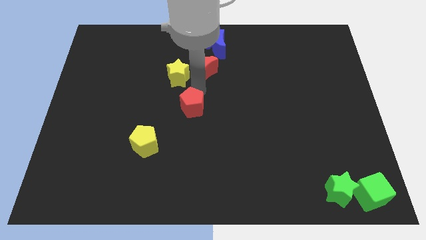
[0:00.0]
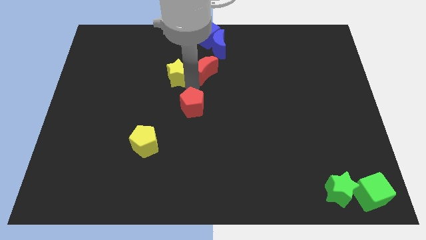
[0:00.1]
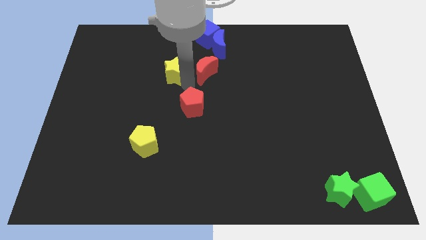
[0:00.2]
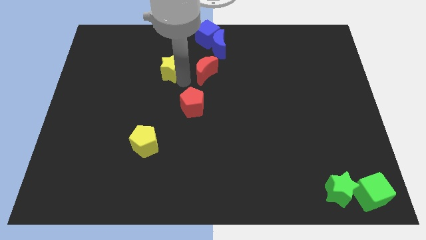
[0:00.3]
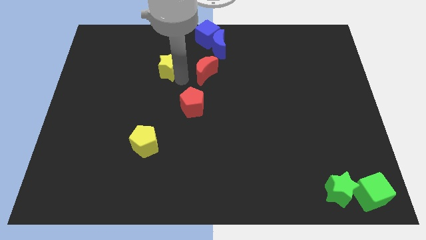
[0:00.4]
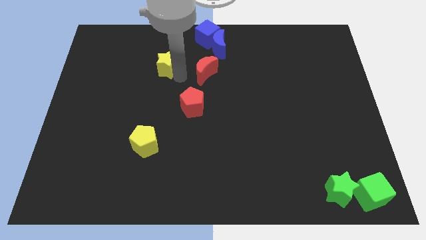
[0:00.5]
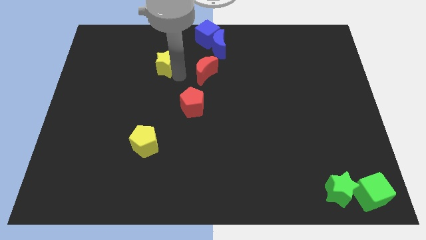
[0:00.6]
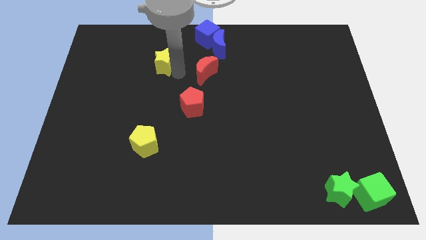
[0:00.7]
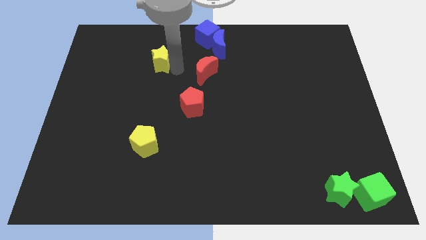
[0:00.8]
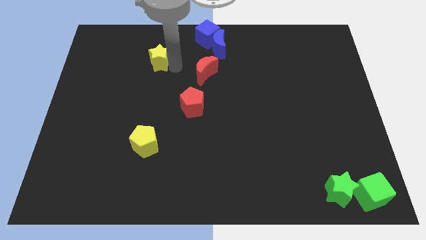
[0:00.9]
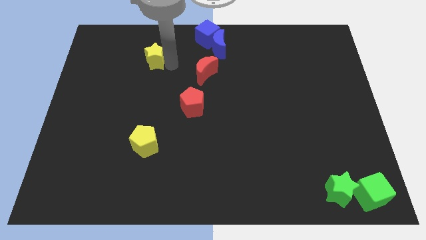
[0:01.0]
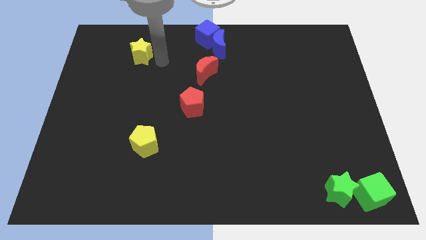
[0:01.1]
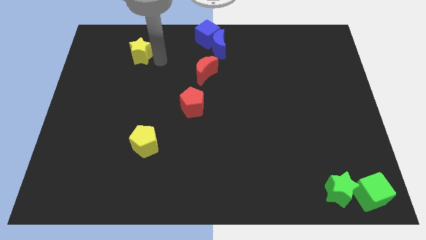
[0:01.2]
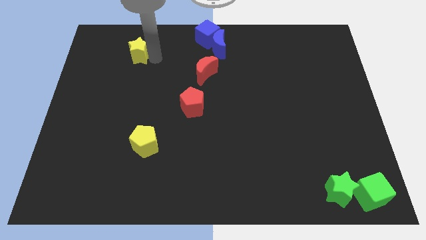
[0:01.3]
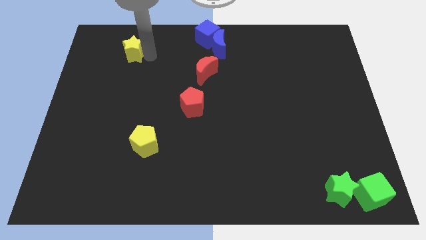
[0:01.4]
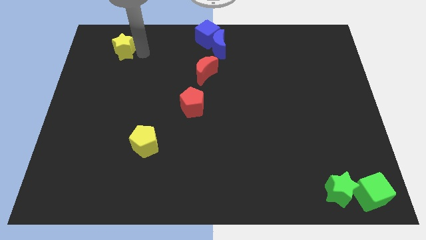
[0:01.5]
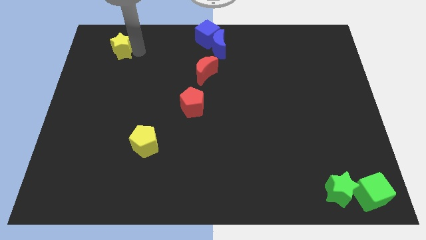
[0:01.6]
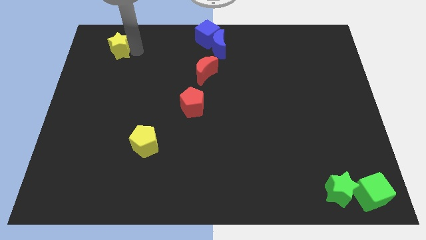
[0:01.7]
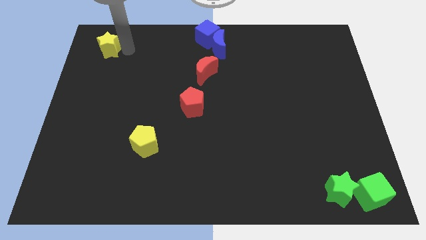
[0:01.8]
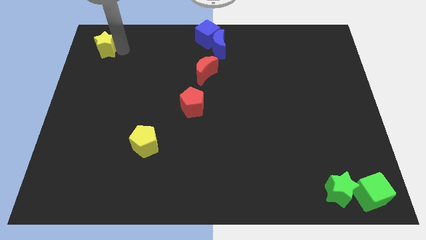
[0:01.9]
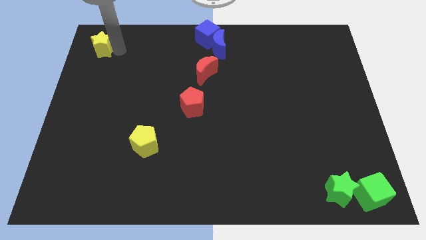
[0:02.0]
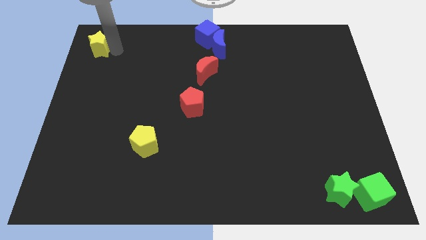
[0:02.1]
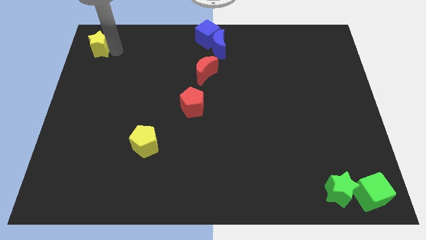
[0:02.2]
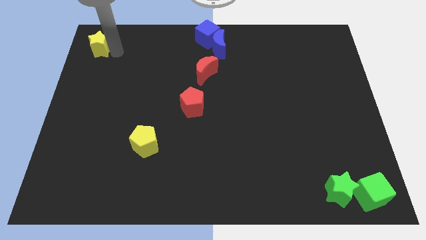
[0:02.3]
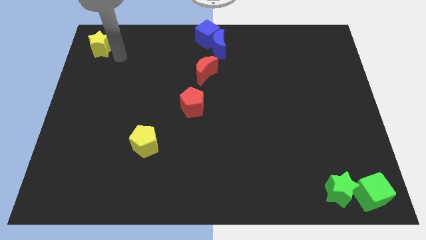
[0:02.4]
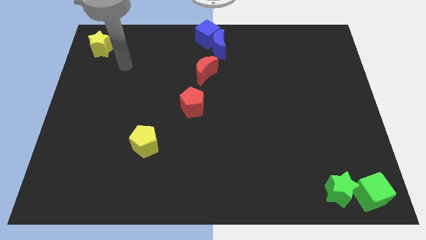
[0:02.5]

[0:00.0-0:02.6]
slide the yellow star to the top left

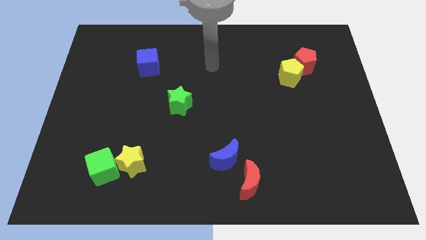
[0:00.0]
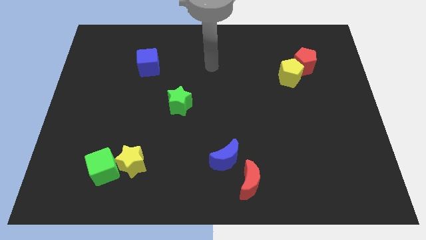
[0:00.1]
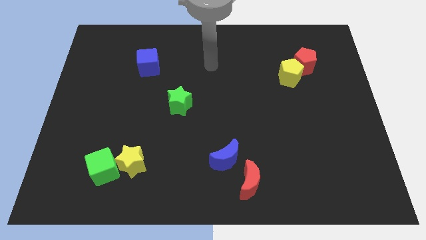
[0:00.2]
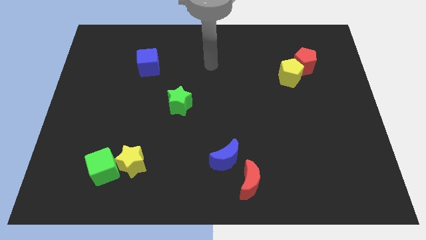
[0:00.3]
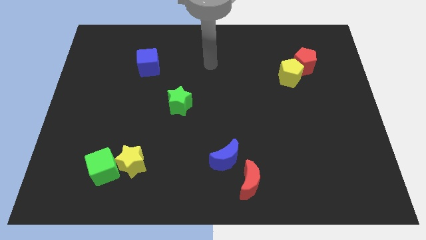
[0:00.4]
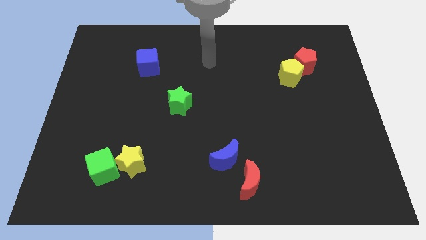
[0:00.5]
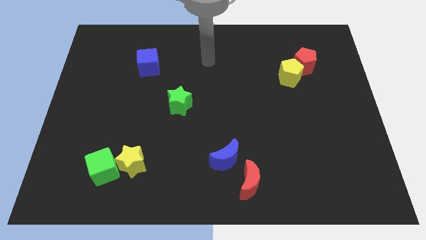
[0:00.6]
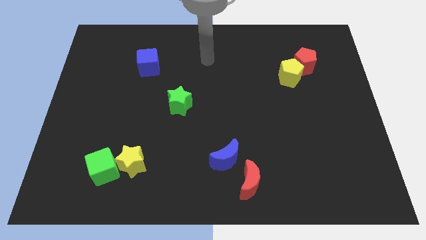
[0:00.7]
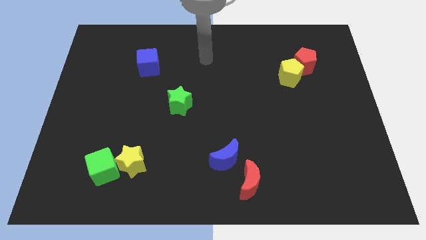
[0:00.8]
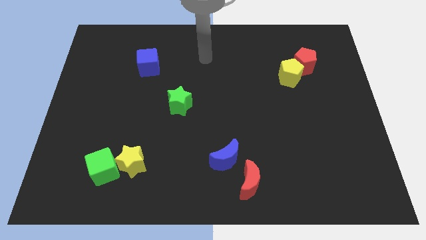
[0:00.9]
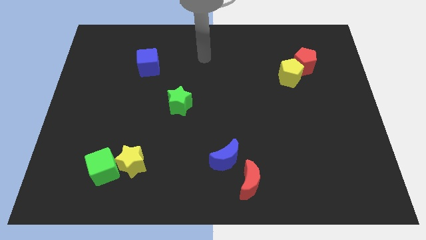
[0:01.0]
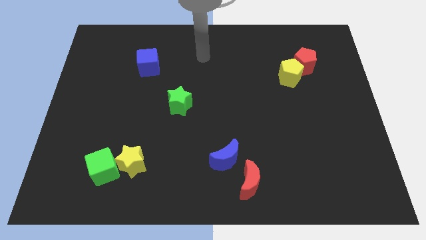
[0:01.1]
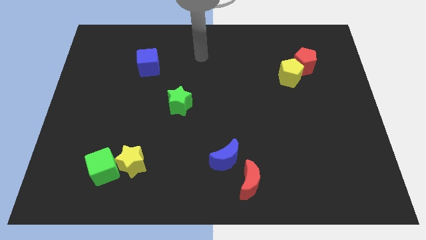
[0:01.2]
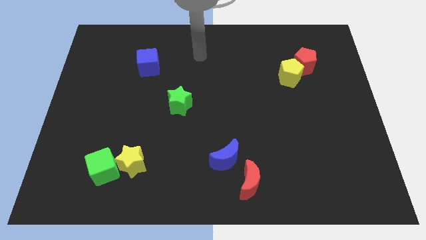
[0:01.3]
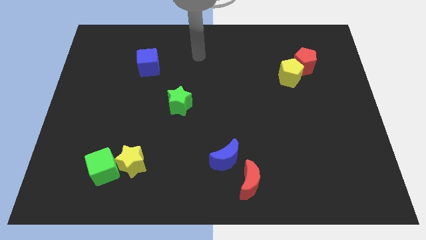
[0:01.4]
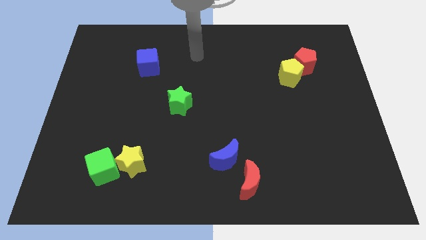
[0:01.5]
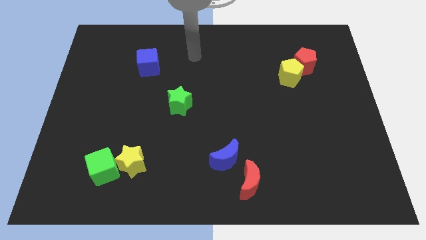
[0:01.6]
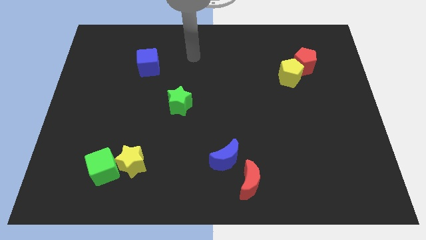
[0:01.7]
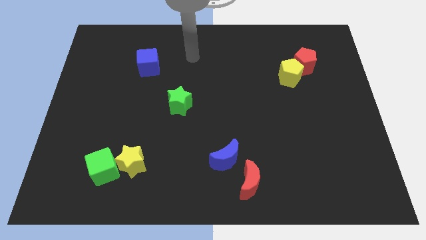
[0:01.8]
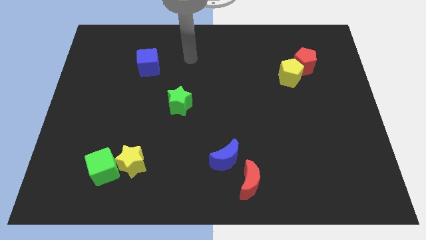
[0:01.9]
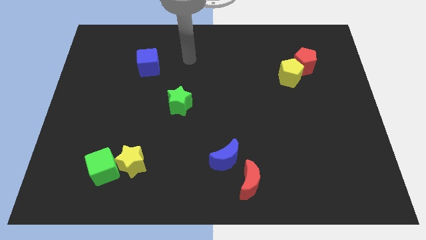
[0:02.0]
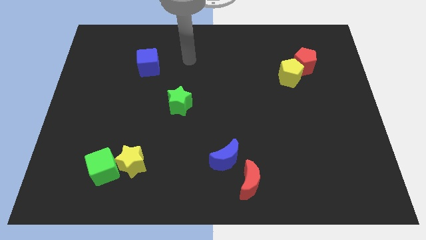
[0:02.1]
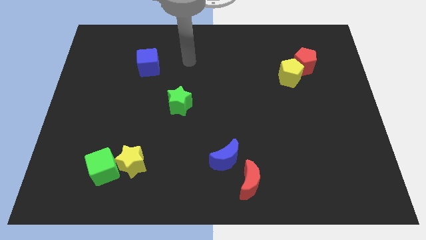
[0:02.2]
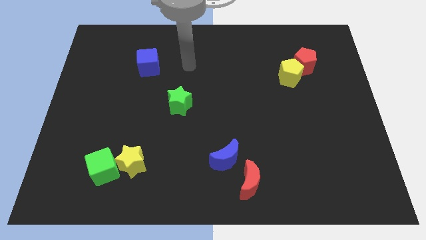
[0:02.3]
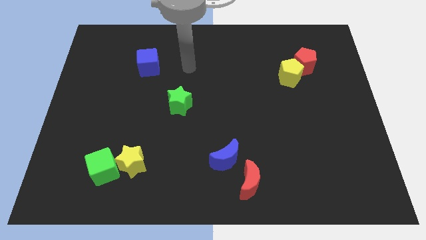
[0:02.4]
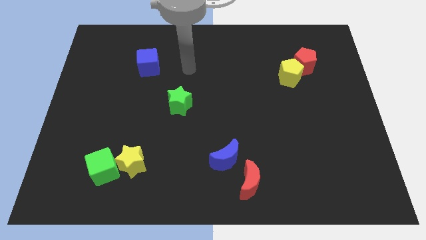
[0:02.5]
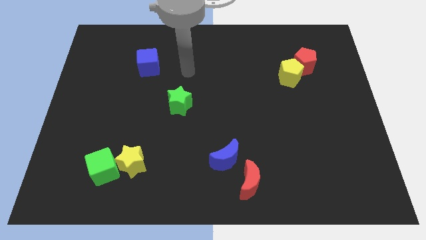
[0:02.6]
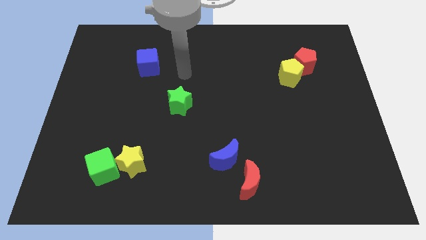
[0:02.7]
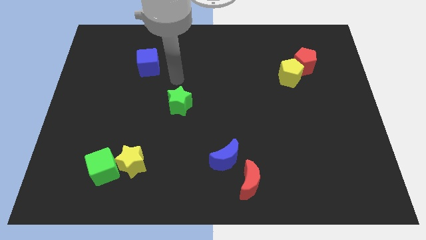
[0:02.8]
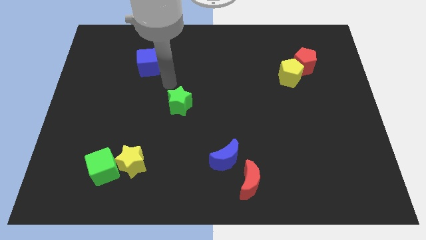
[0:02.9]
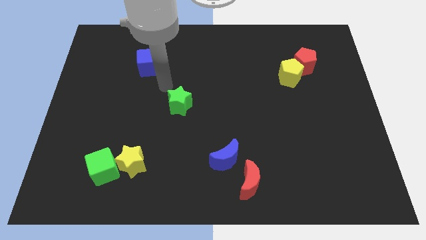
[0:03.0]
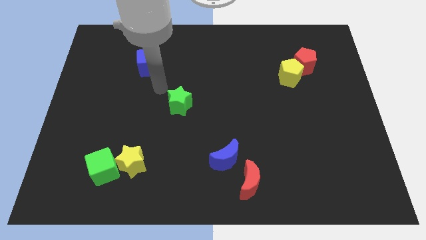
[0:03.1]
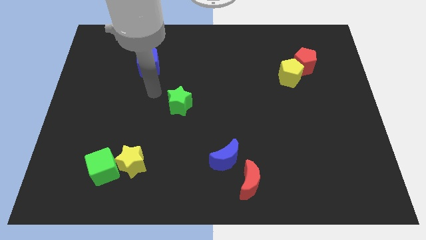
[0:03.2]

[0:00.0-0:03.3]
place your arm in between the blue cube and green star

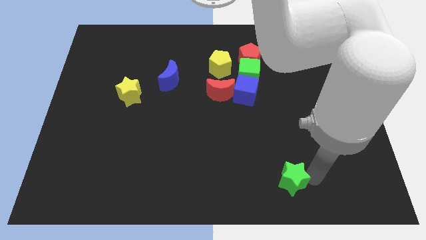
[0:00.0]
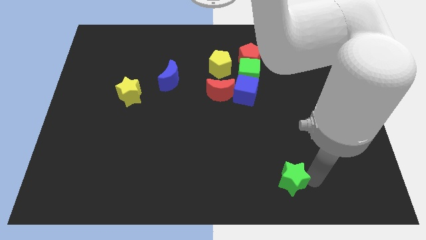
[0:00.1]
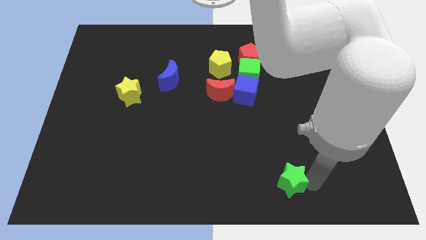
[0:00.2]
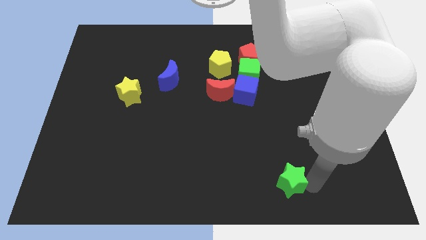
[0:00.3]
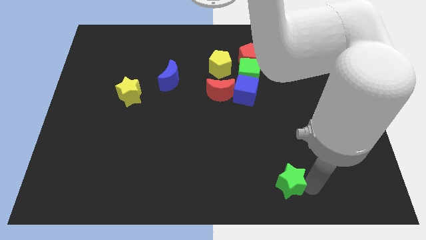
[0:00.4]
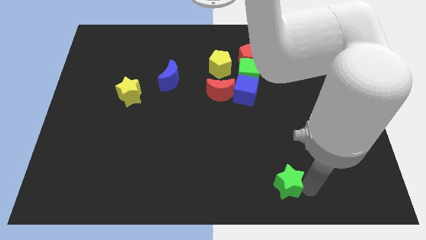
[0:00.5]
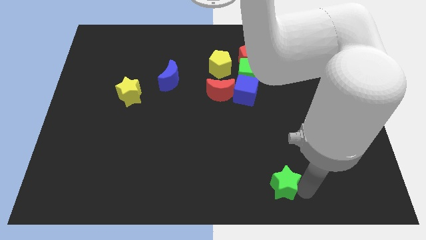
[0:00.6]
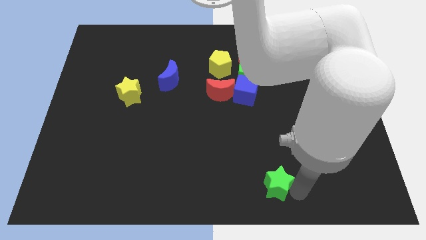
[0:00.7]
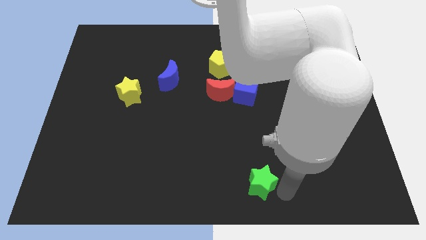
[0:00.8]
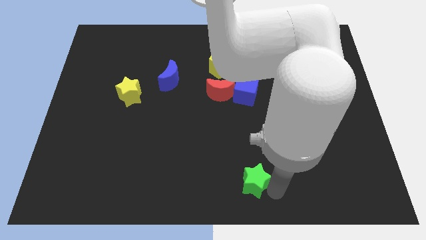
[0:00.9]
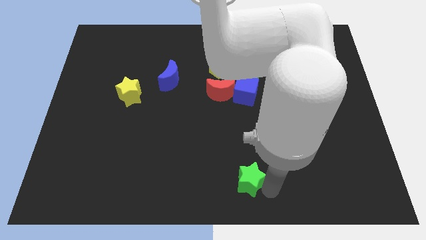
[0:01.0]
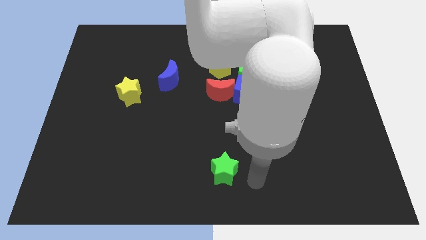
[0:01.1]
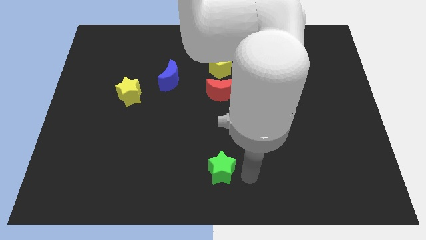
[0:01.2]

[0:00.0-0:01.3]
place the green star below the red moon

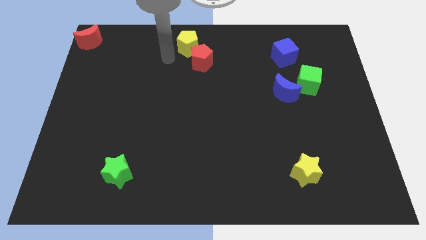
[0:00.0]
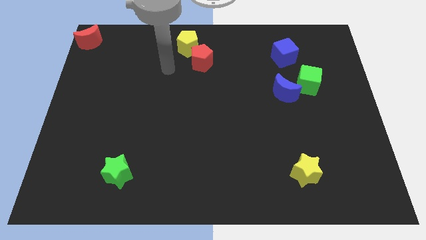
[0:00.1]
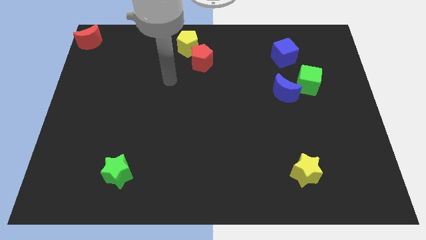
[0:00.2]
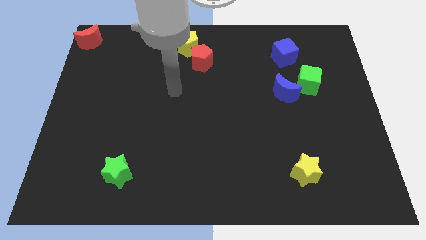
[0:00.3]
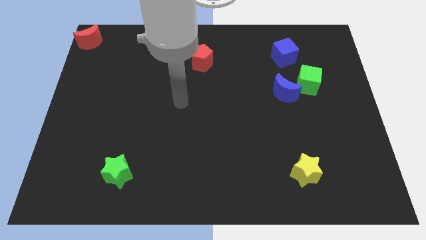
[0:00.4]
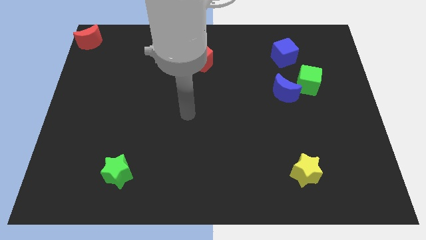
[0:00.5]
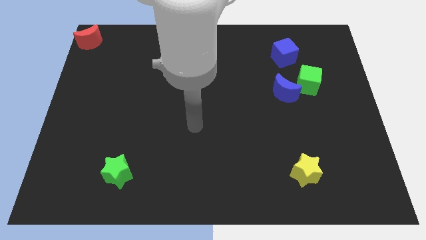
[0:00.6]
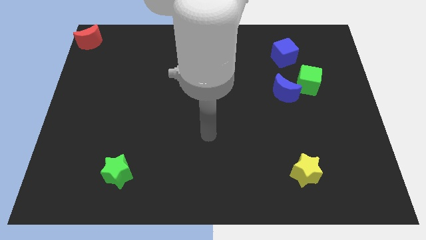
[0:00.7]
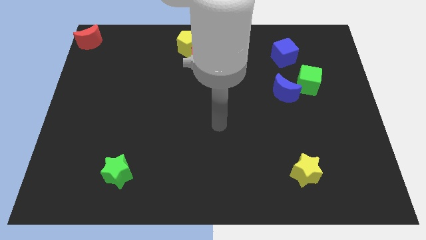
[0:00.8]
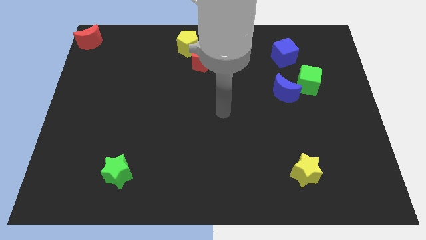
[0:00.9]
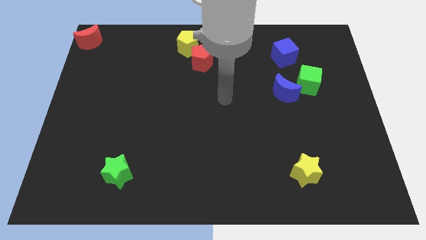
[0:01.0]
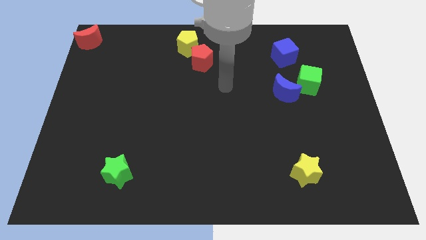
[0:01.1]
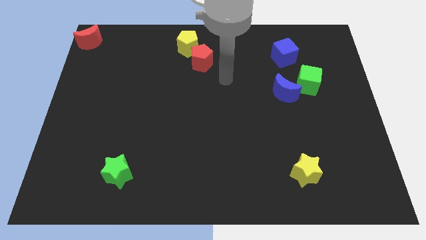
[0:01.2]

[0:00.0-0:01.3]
move the arm away from the yellow pentagon

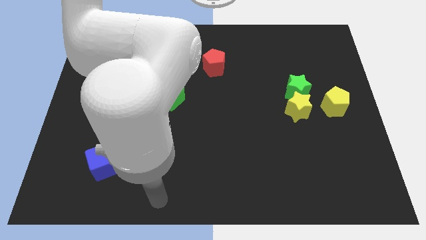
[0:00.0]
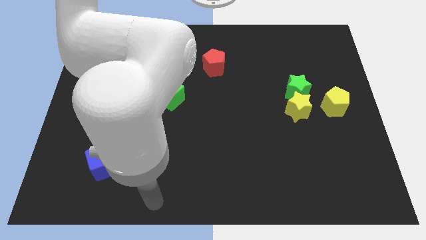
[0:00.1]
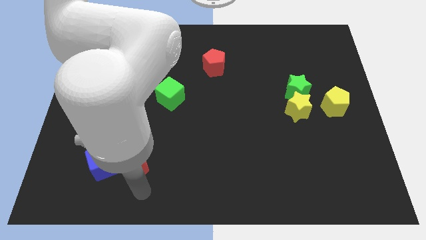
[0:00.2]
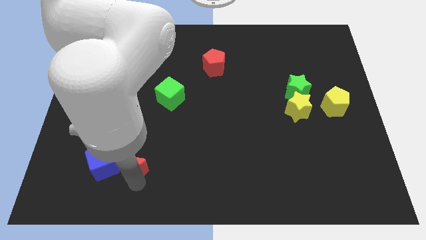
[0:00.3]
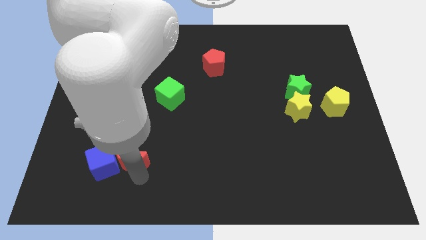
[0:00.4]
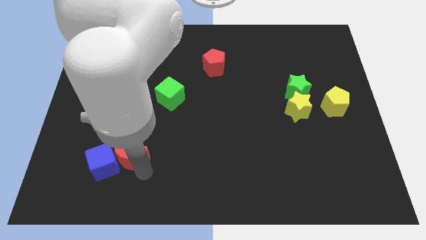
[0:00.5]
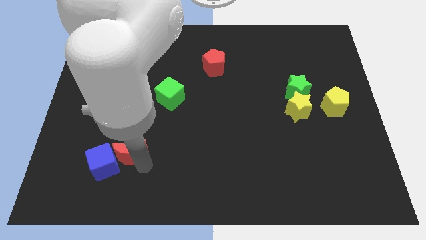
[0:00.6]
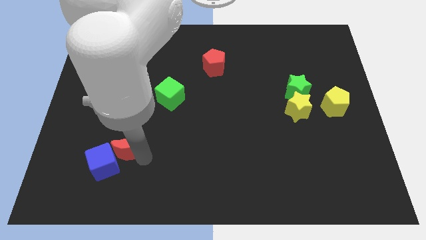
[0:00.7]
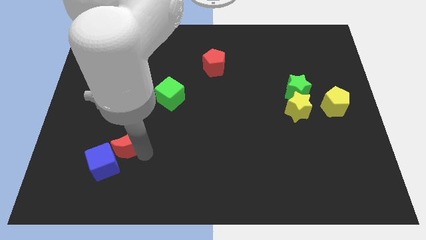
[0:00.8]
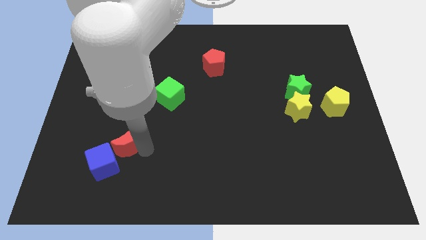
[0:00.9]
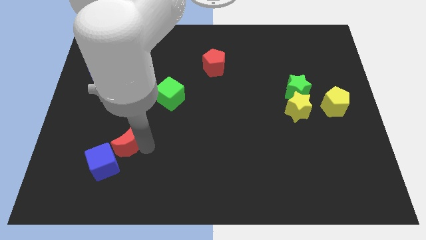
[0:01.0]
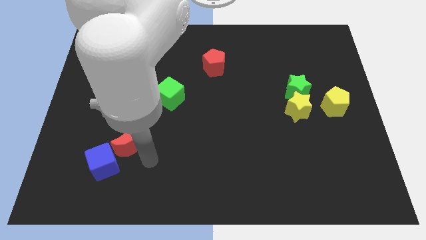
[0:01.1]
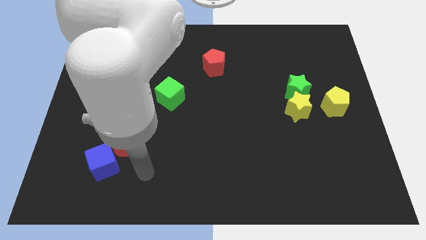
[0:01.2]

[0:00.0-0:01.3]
move the red crescent to the right of the blue cube
